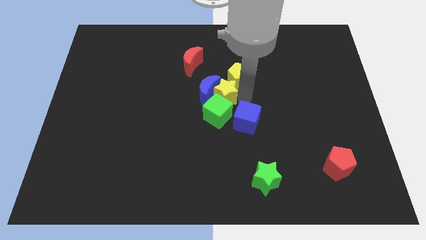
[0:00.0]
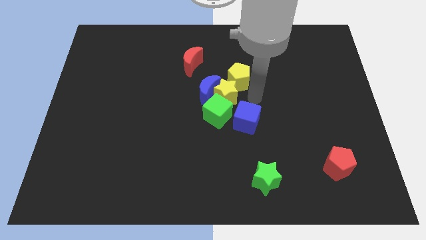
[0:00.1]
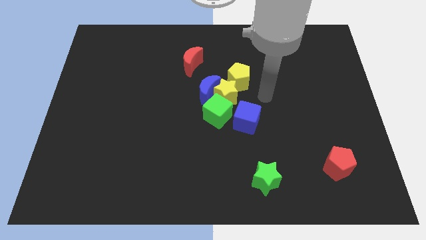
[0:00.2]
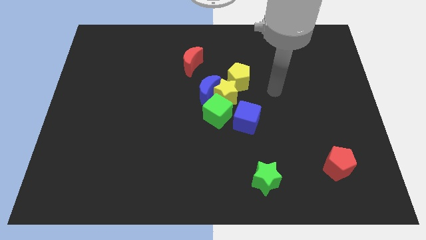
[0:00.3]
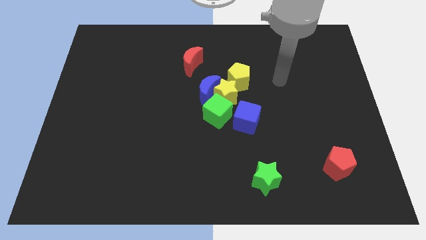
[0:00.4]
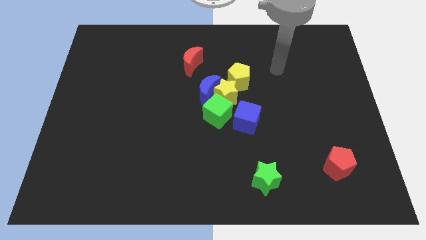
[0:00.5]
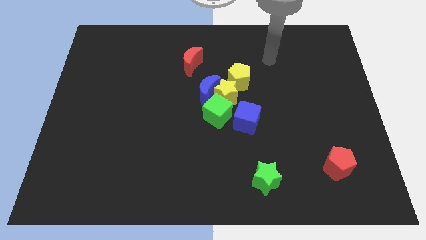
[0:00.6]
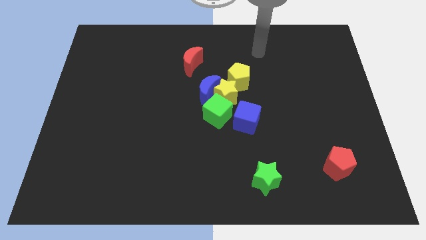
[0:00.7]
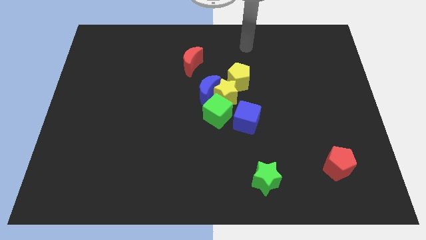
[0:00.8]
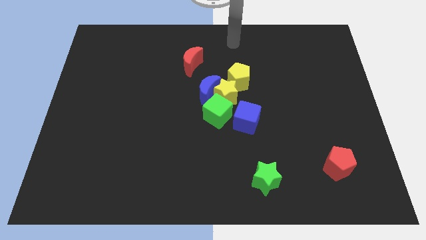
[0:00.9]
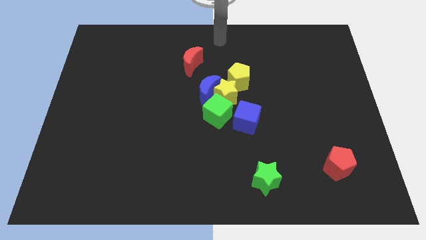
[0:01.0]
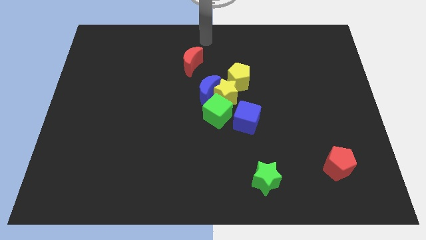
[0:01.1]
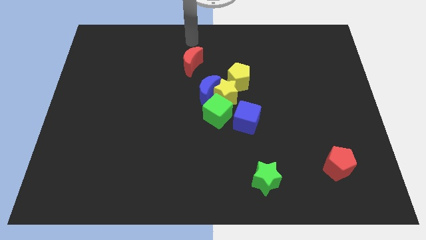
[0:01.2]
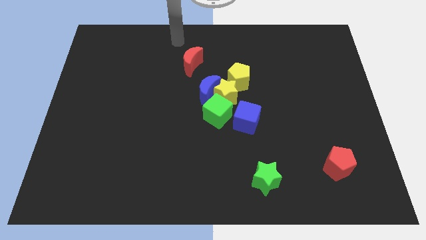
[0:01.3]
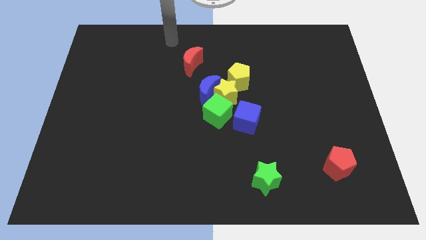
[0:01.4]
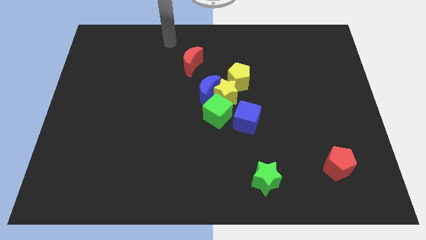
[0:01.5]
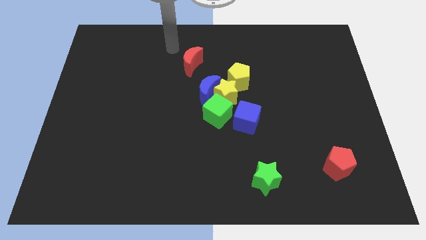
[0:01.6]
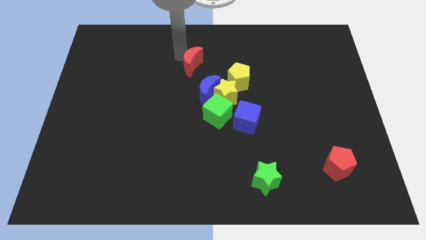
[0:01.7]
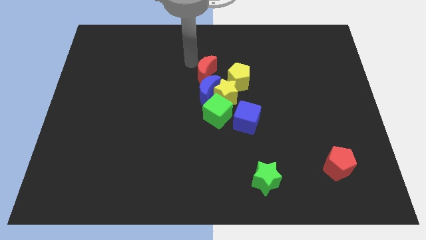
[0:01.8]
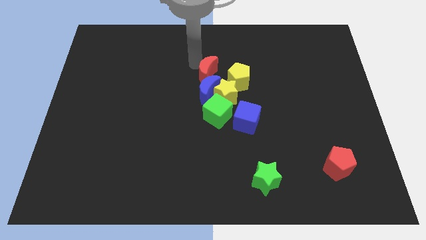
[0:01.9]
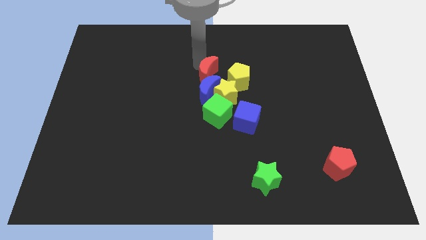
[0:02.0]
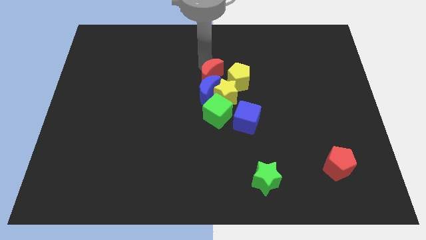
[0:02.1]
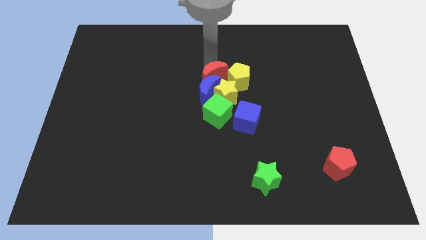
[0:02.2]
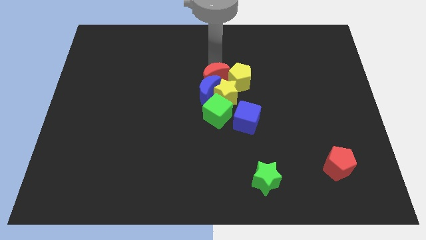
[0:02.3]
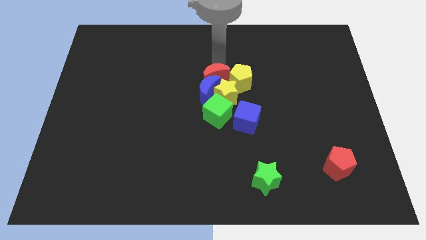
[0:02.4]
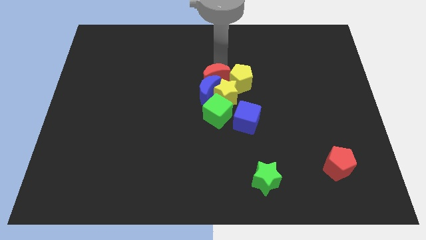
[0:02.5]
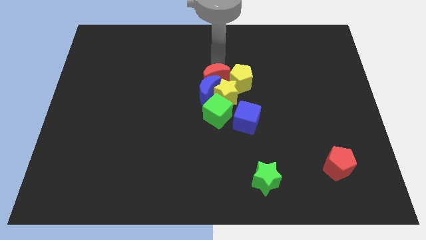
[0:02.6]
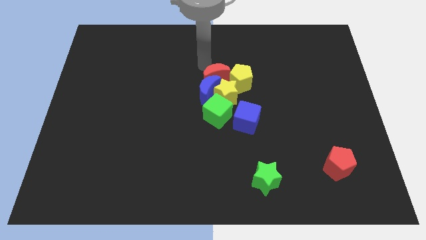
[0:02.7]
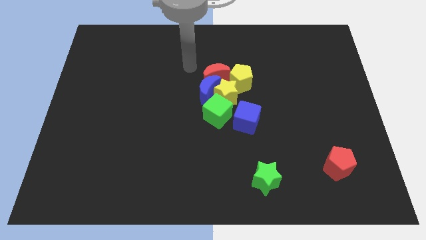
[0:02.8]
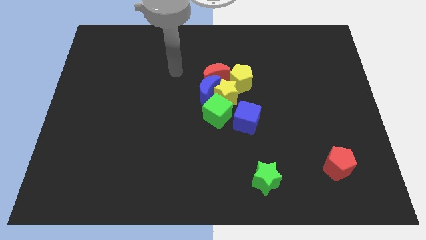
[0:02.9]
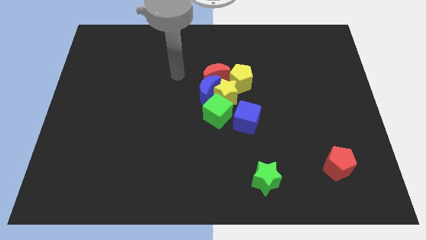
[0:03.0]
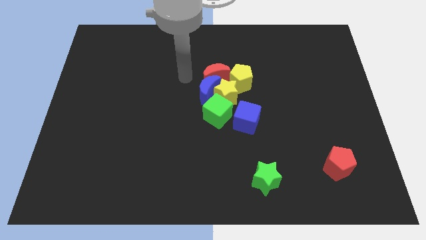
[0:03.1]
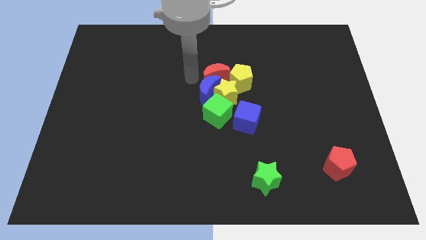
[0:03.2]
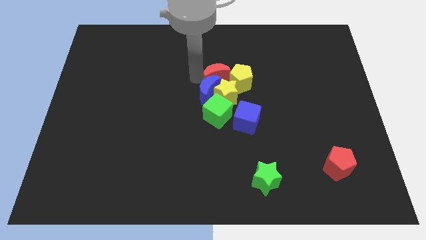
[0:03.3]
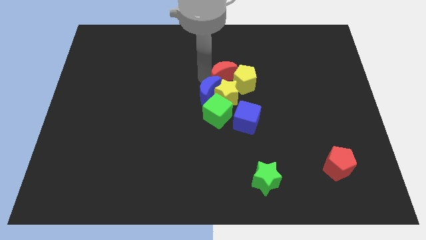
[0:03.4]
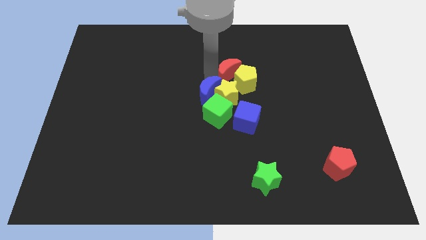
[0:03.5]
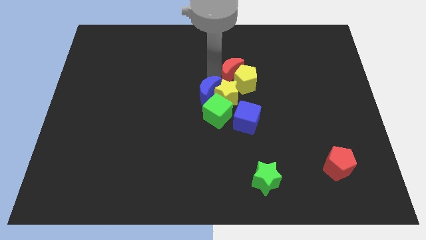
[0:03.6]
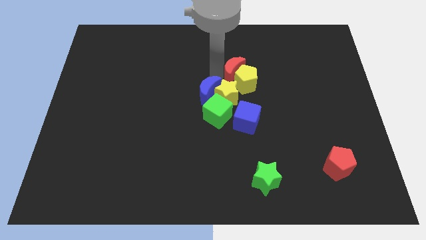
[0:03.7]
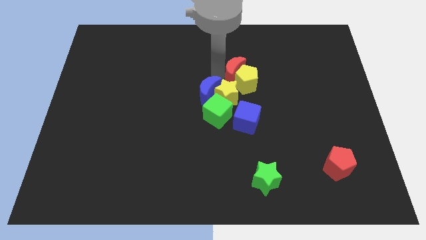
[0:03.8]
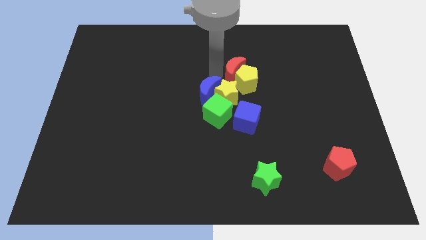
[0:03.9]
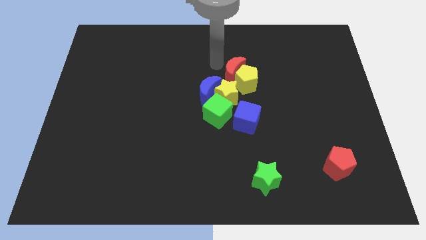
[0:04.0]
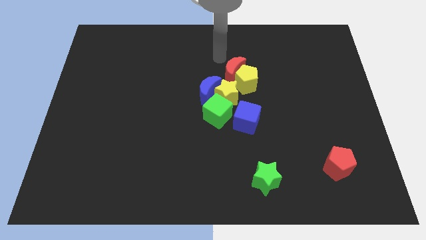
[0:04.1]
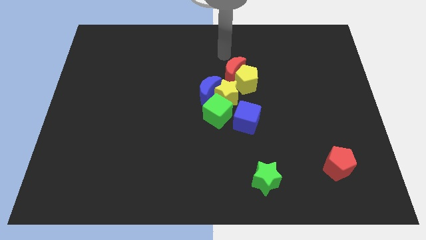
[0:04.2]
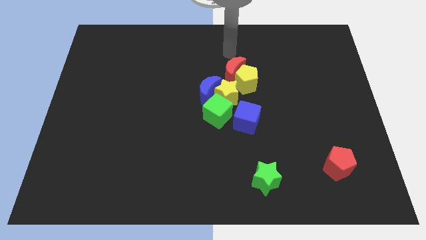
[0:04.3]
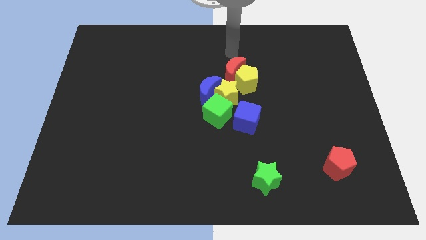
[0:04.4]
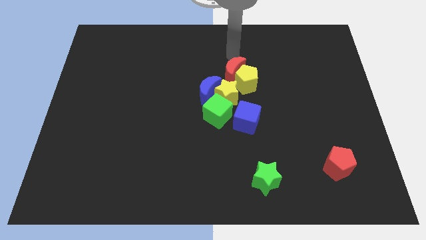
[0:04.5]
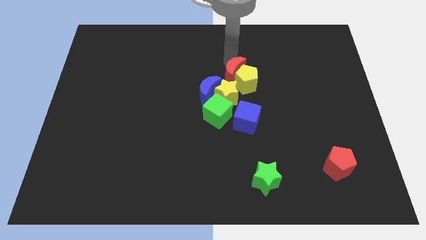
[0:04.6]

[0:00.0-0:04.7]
push the red crescent into the yellow pentagon

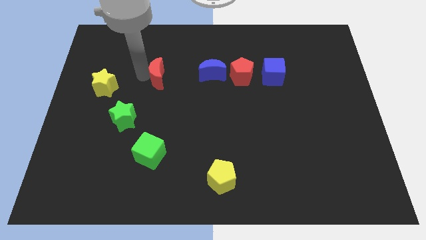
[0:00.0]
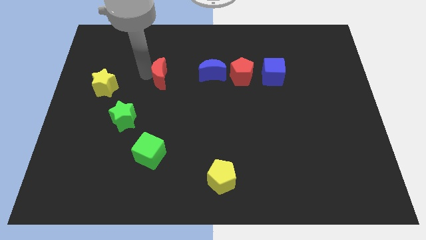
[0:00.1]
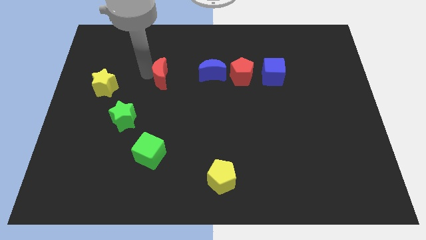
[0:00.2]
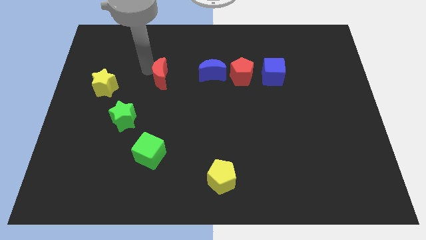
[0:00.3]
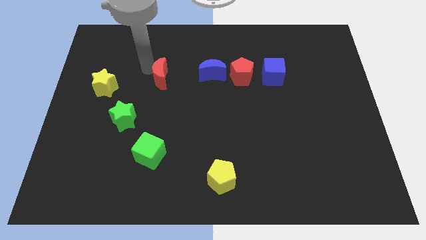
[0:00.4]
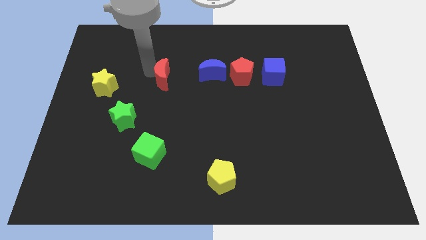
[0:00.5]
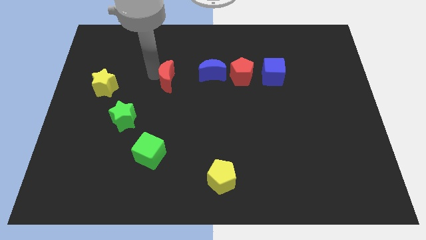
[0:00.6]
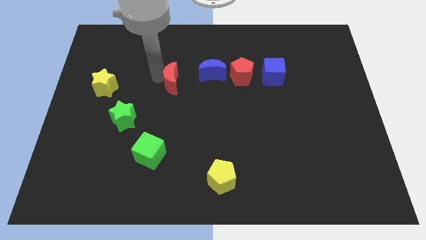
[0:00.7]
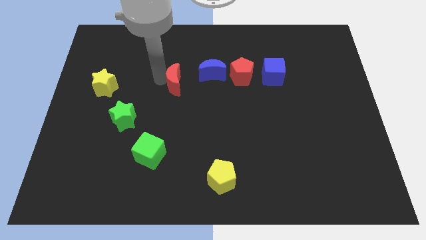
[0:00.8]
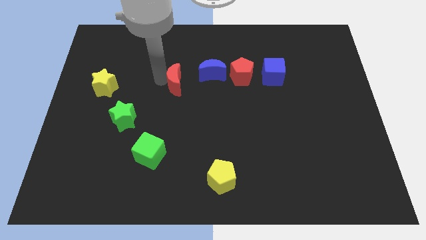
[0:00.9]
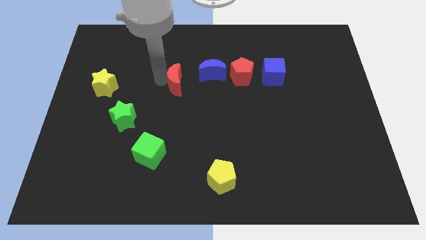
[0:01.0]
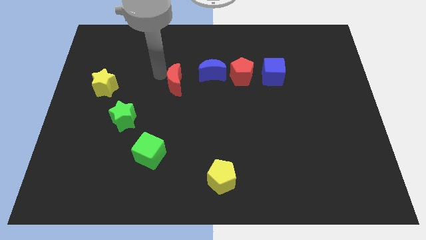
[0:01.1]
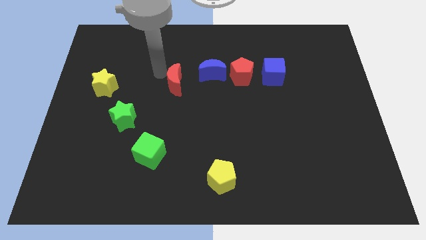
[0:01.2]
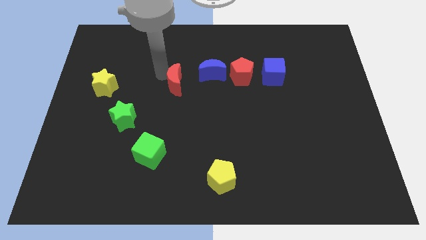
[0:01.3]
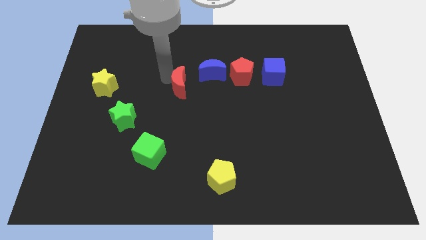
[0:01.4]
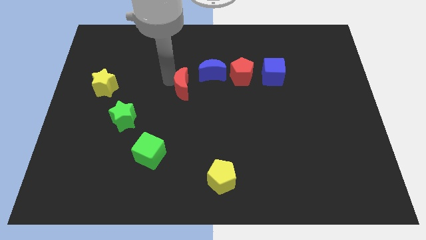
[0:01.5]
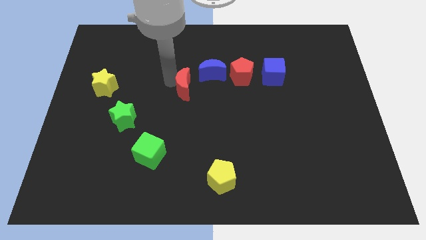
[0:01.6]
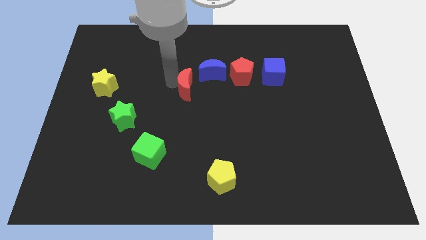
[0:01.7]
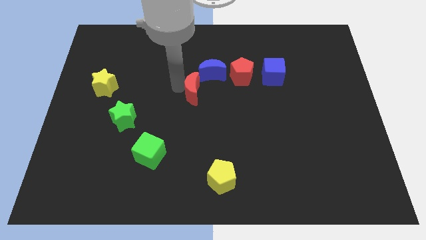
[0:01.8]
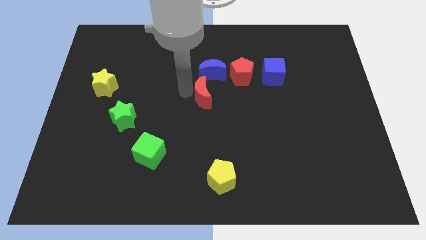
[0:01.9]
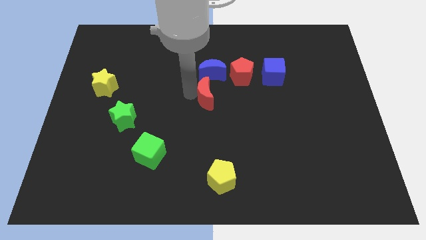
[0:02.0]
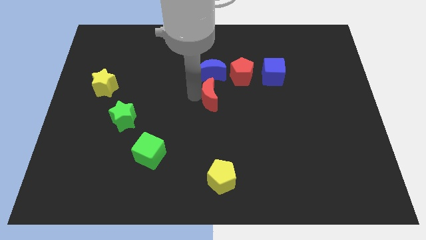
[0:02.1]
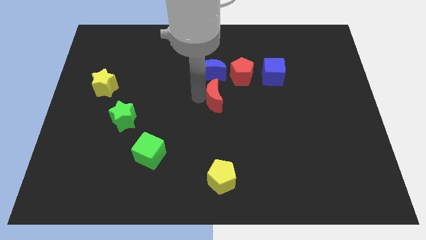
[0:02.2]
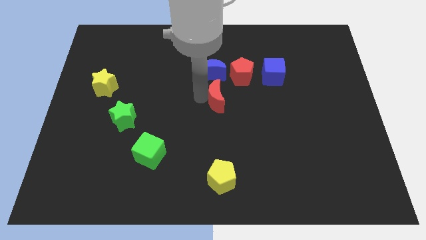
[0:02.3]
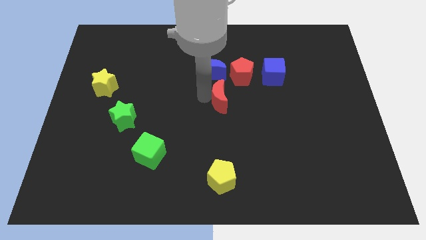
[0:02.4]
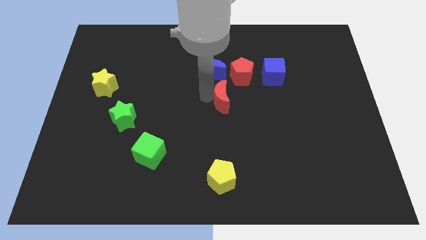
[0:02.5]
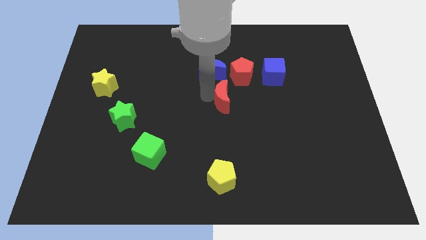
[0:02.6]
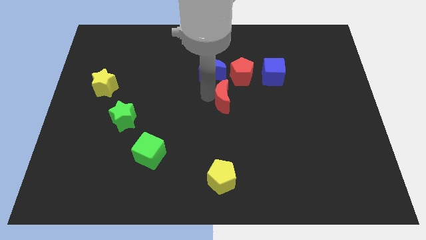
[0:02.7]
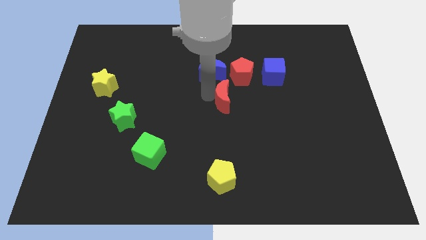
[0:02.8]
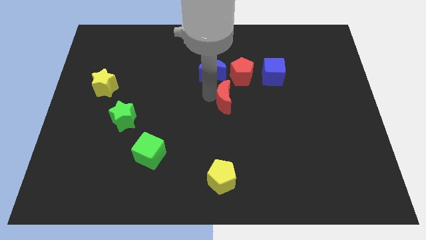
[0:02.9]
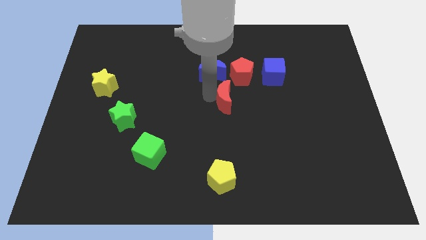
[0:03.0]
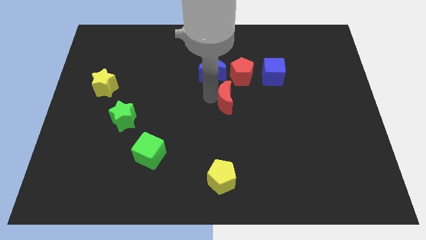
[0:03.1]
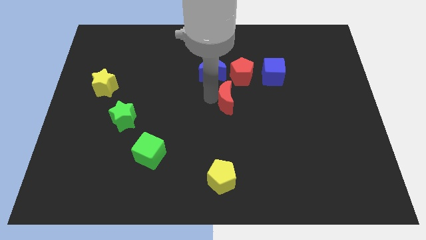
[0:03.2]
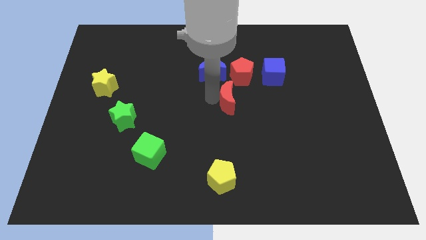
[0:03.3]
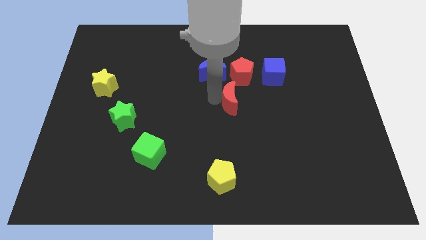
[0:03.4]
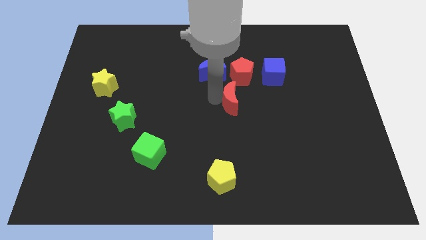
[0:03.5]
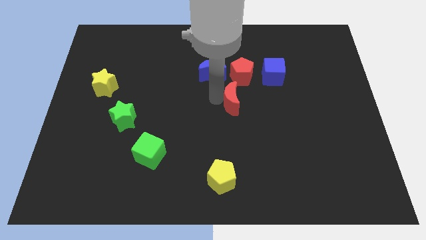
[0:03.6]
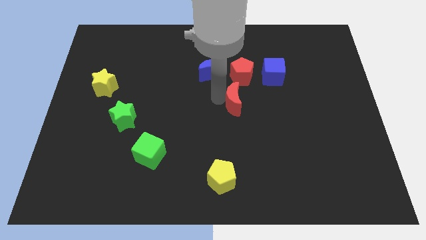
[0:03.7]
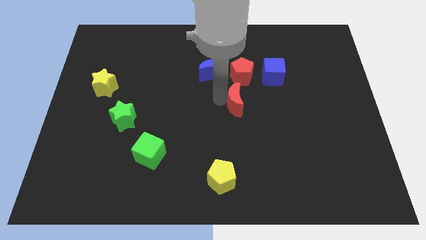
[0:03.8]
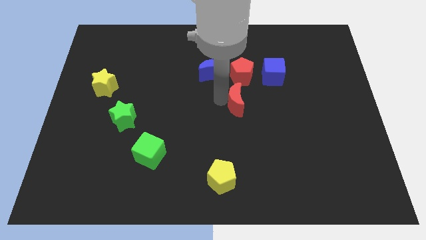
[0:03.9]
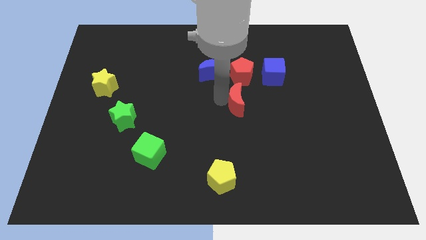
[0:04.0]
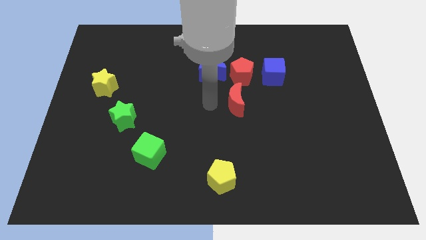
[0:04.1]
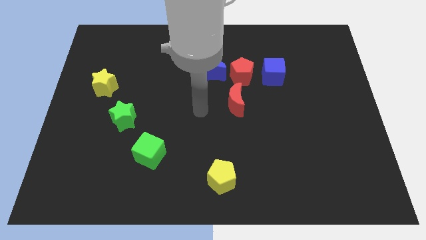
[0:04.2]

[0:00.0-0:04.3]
place the red crescent below the red pentagon
